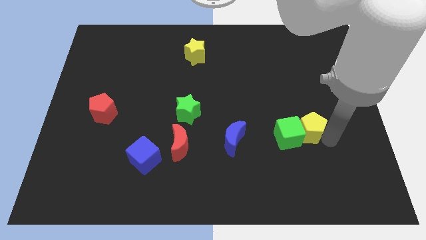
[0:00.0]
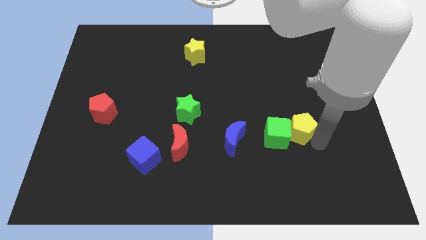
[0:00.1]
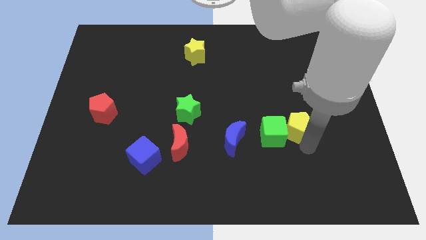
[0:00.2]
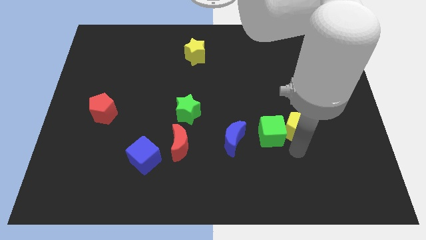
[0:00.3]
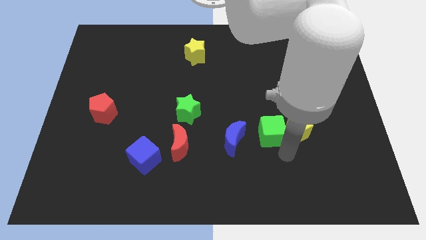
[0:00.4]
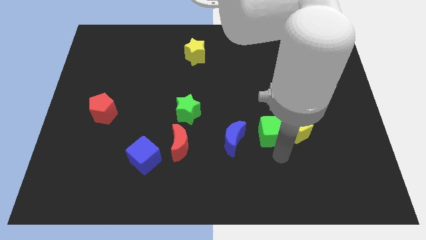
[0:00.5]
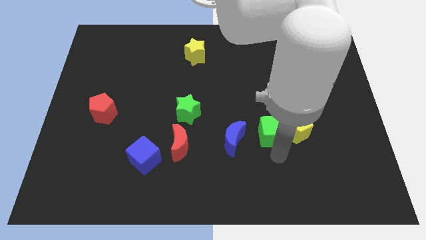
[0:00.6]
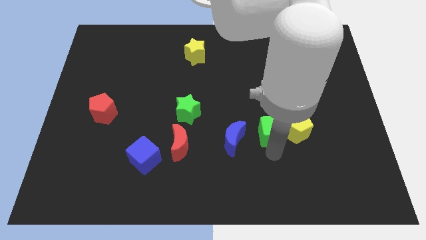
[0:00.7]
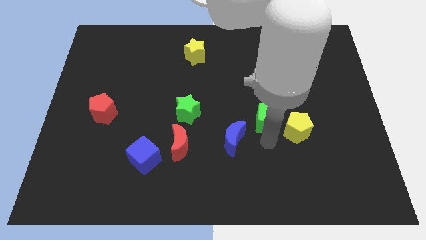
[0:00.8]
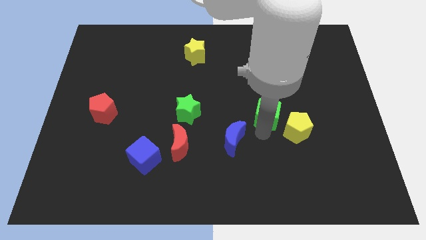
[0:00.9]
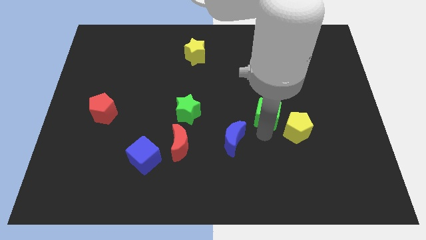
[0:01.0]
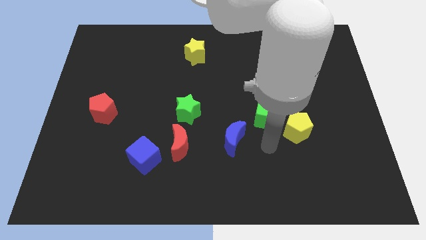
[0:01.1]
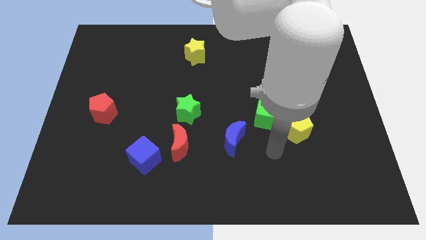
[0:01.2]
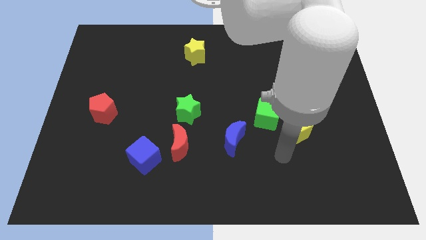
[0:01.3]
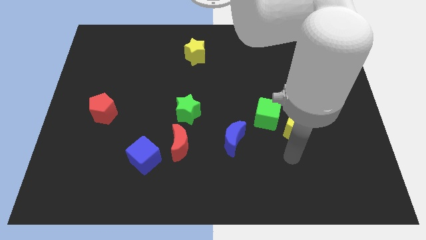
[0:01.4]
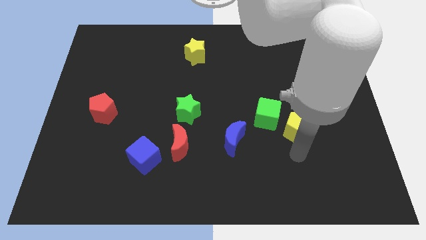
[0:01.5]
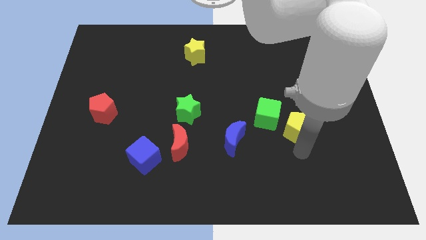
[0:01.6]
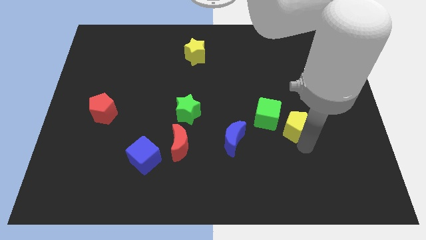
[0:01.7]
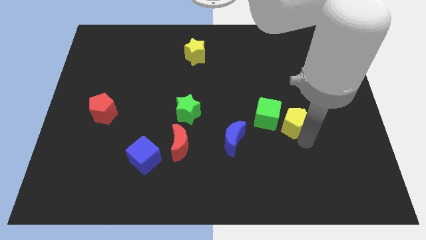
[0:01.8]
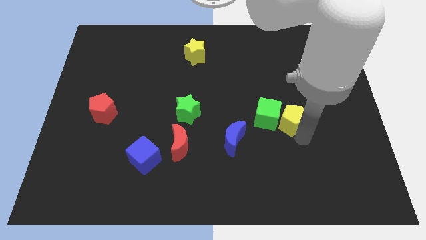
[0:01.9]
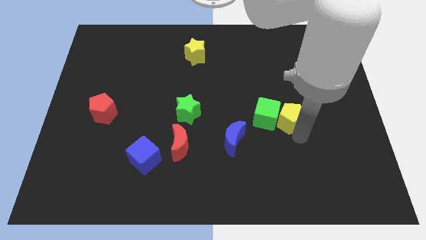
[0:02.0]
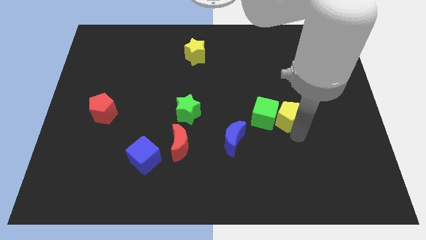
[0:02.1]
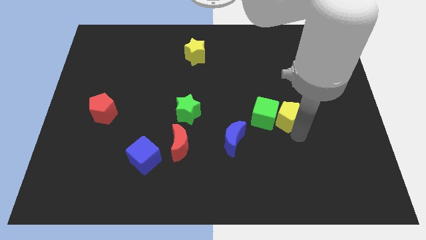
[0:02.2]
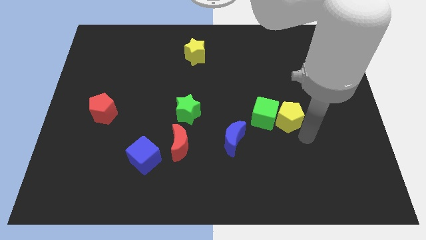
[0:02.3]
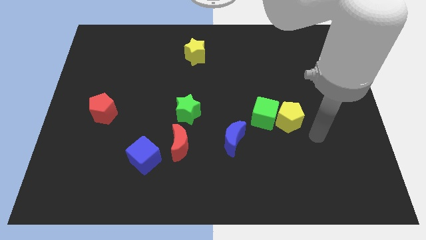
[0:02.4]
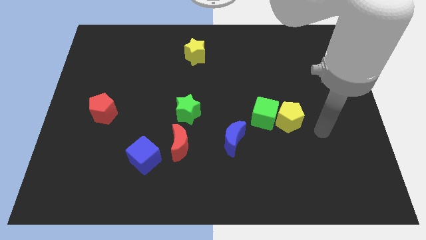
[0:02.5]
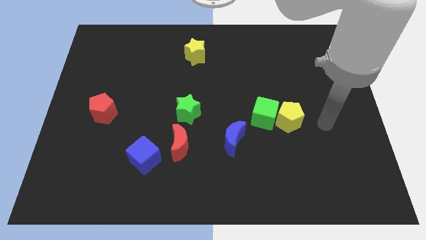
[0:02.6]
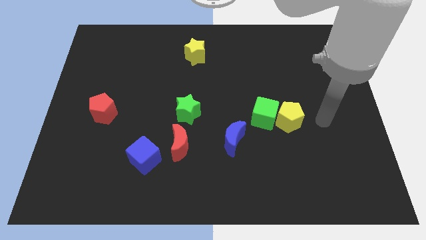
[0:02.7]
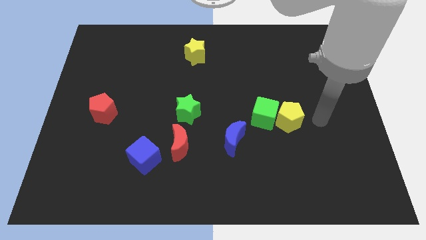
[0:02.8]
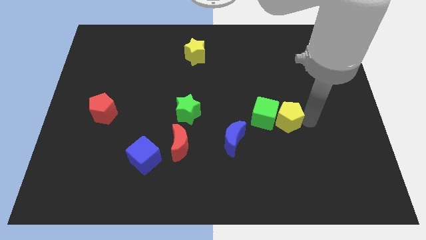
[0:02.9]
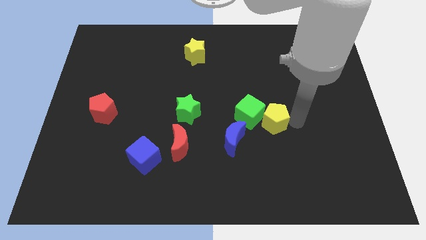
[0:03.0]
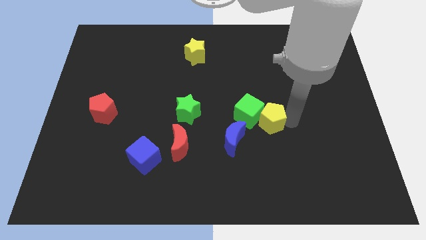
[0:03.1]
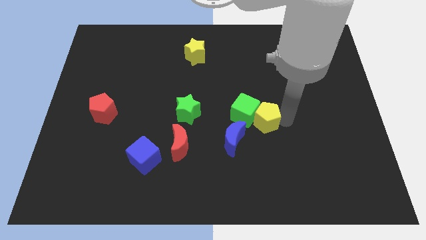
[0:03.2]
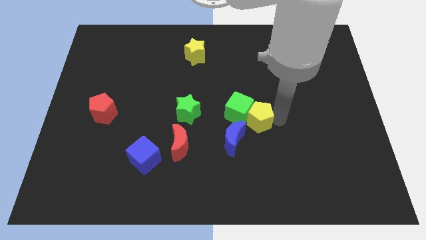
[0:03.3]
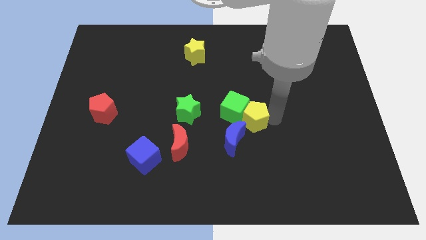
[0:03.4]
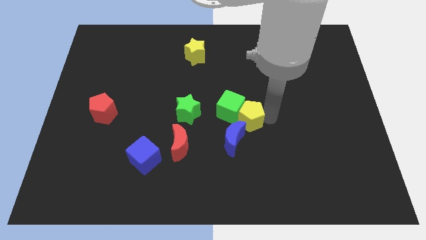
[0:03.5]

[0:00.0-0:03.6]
push yellow pentagon along with green cube to the top of blue crescent

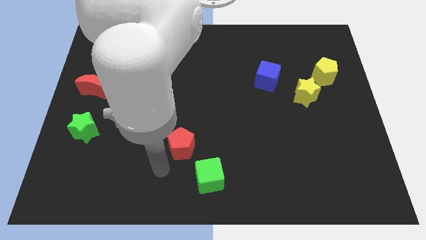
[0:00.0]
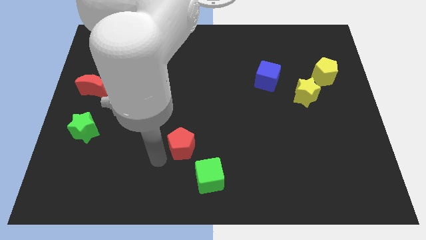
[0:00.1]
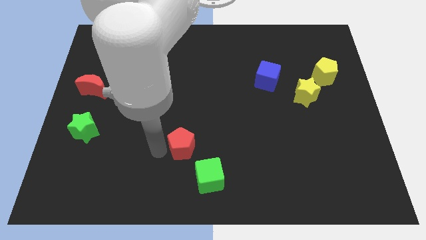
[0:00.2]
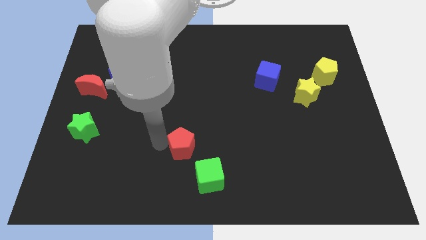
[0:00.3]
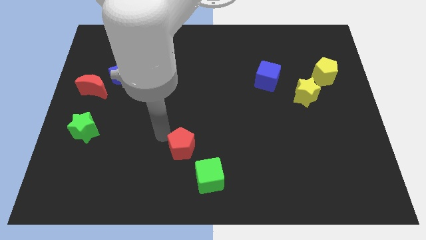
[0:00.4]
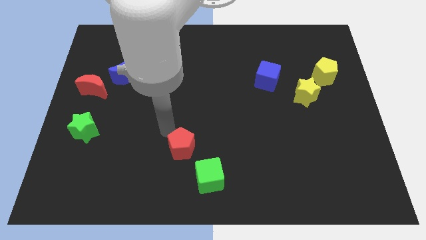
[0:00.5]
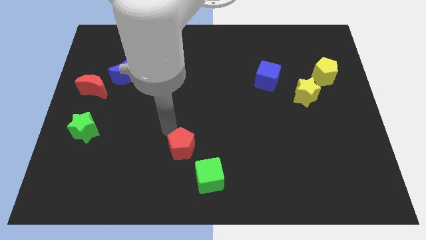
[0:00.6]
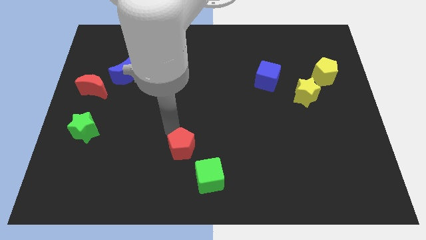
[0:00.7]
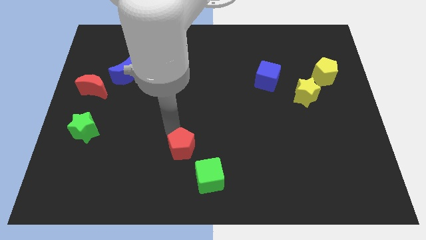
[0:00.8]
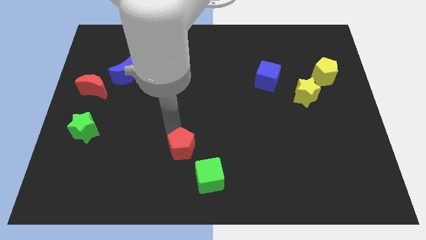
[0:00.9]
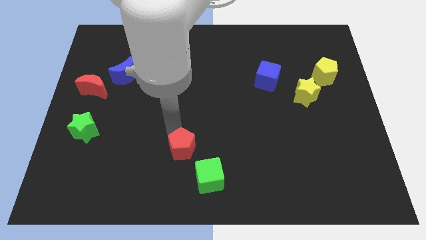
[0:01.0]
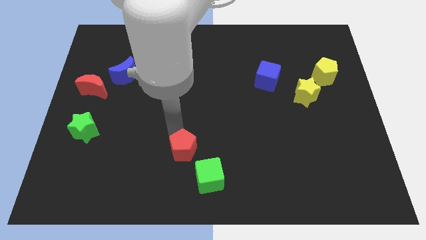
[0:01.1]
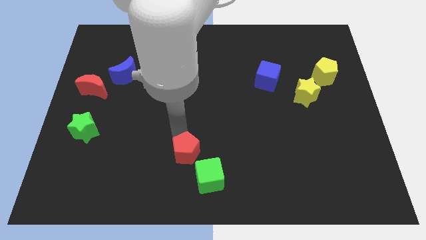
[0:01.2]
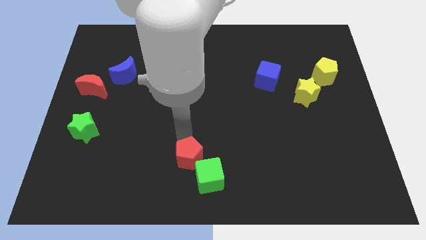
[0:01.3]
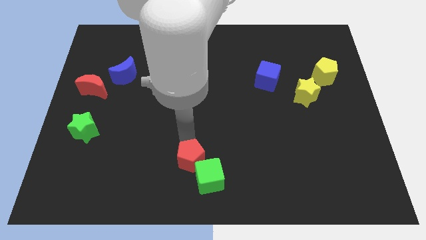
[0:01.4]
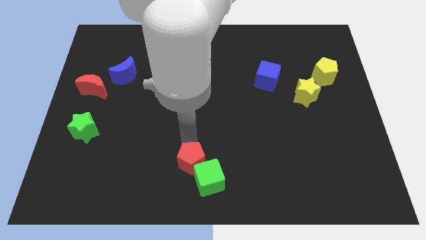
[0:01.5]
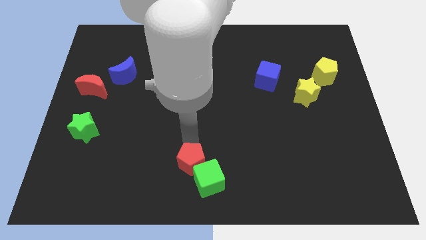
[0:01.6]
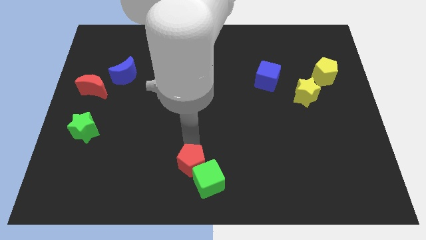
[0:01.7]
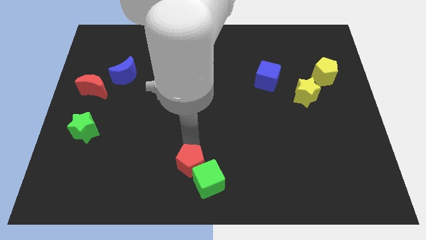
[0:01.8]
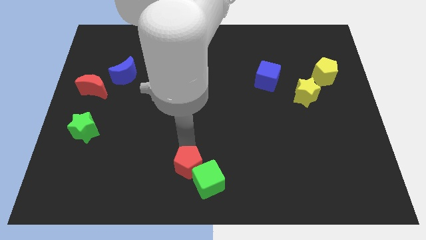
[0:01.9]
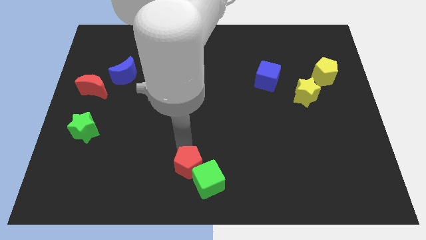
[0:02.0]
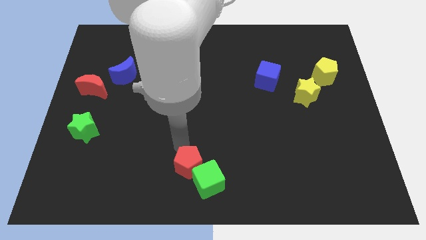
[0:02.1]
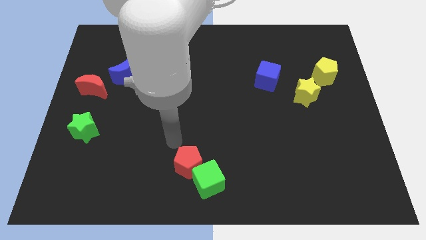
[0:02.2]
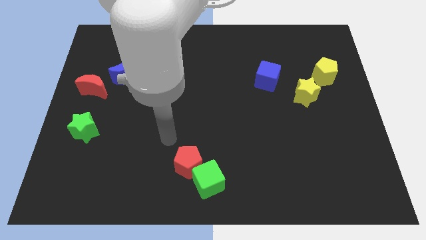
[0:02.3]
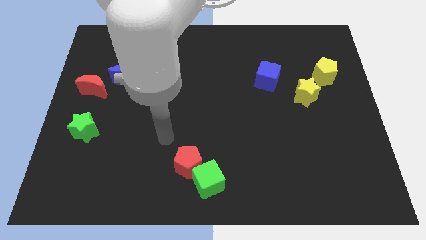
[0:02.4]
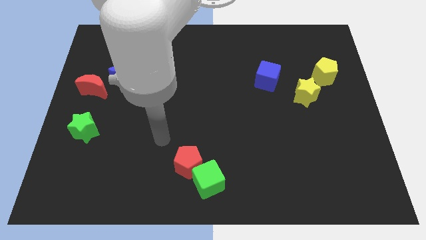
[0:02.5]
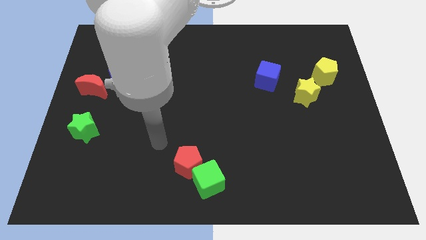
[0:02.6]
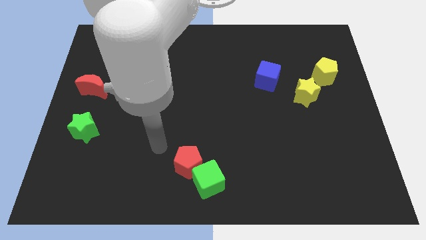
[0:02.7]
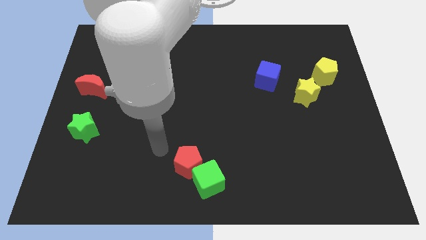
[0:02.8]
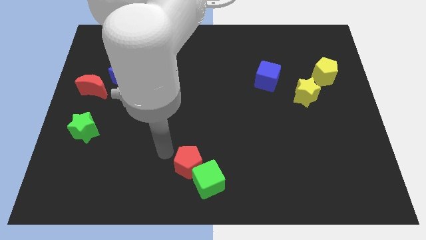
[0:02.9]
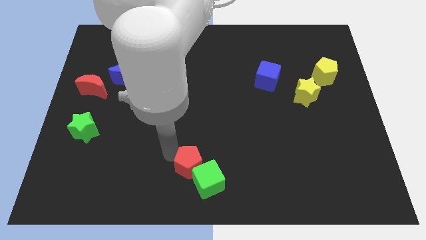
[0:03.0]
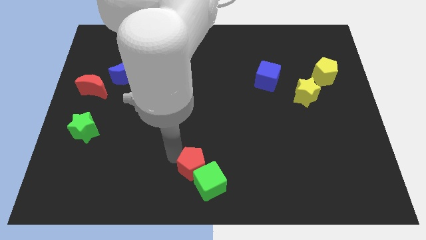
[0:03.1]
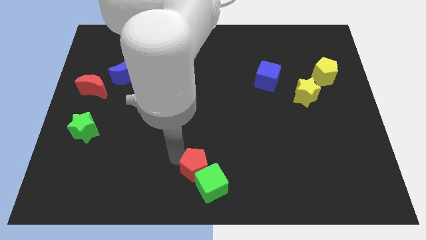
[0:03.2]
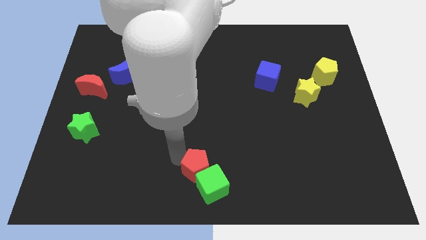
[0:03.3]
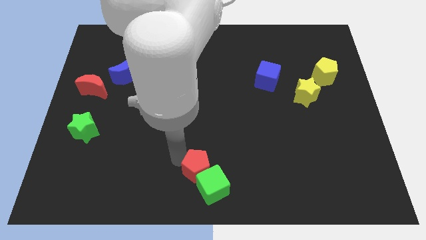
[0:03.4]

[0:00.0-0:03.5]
move the red pentagon into the green cube

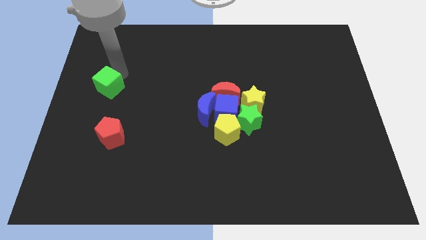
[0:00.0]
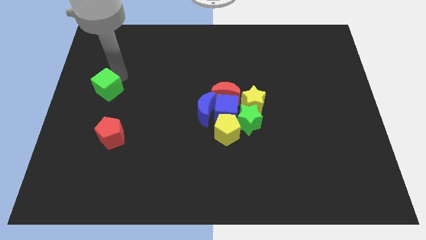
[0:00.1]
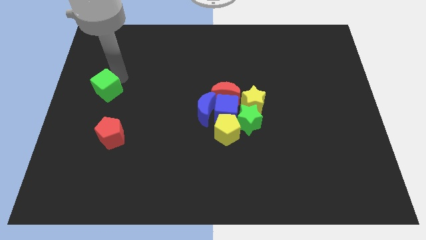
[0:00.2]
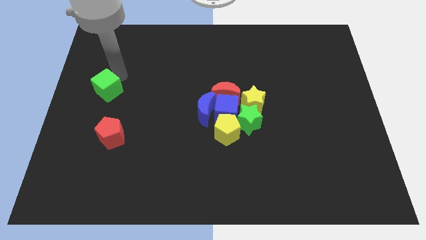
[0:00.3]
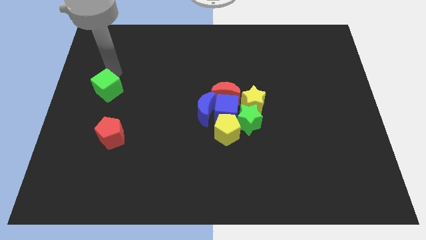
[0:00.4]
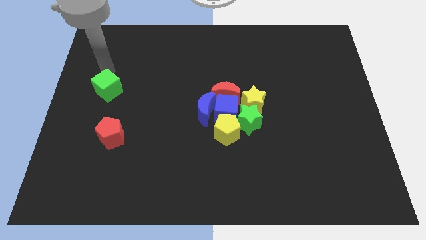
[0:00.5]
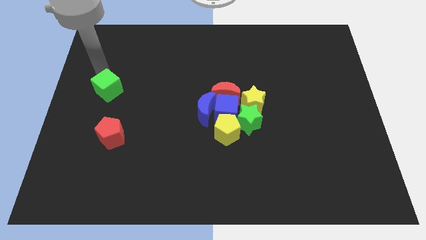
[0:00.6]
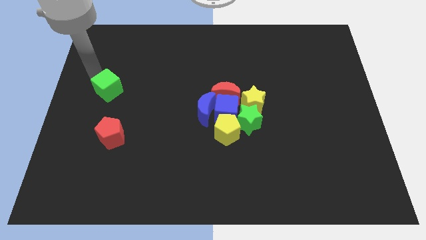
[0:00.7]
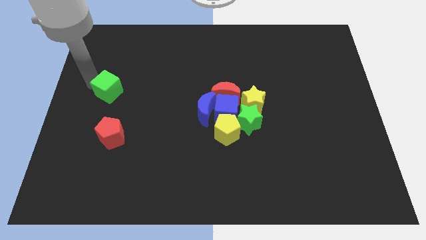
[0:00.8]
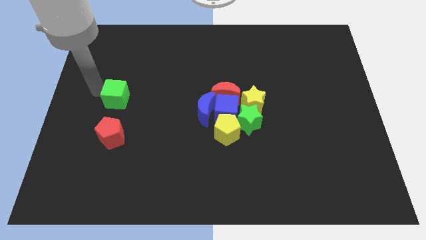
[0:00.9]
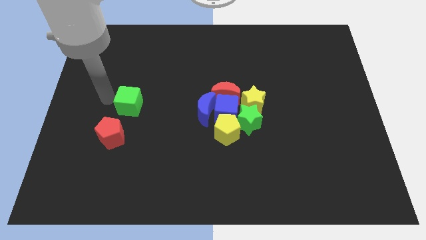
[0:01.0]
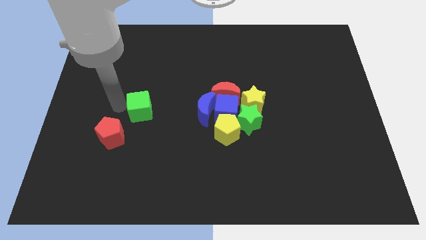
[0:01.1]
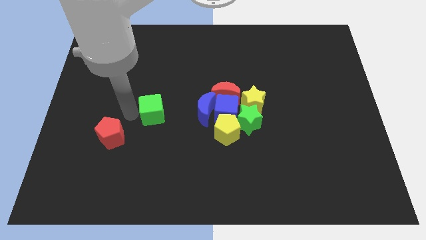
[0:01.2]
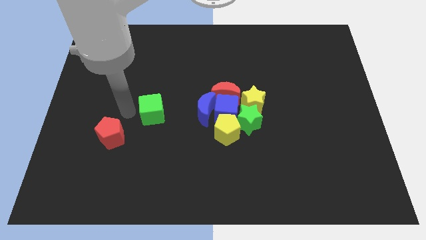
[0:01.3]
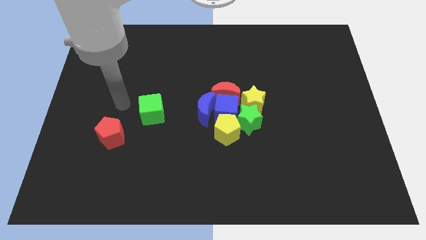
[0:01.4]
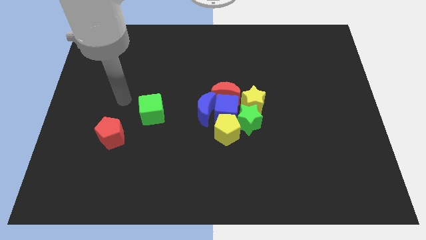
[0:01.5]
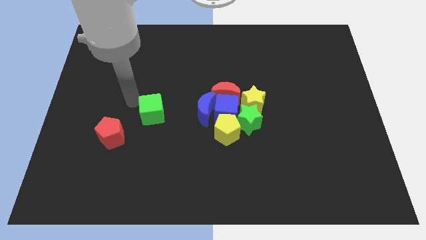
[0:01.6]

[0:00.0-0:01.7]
move green cube to the left side of the blue crescent
